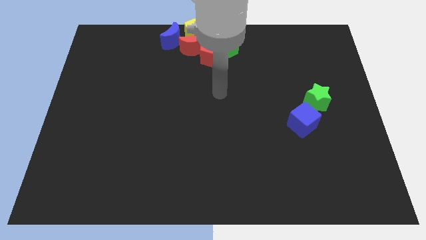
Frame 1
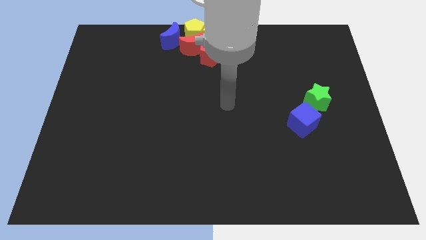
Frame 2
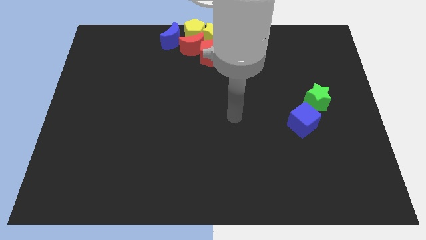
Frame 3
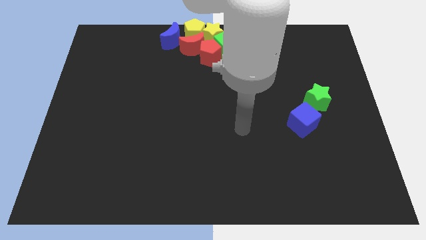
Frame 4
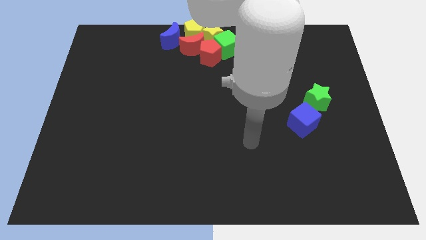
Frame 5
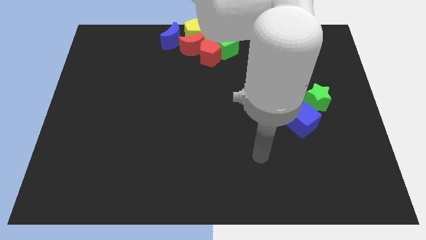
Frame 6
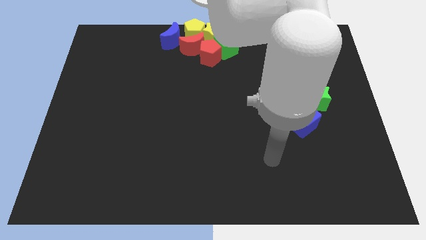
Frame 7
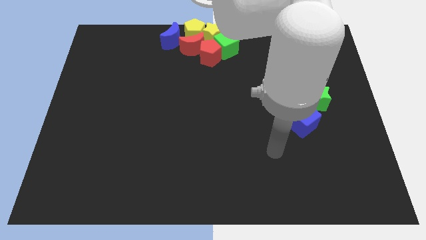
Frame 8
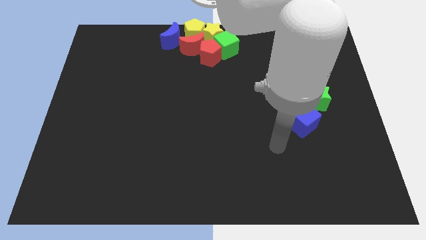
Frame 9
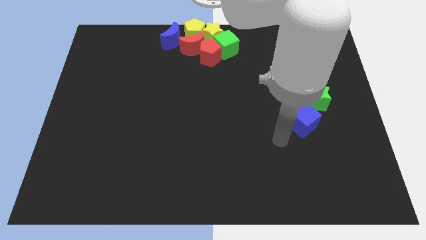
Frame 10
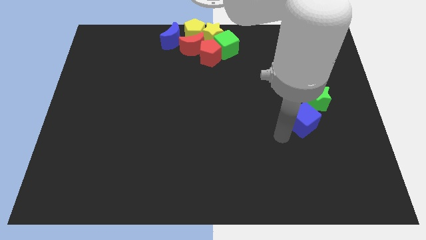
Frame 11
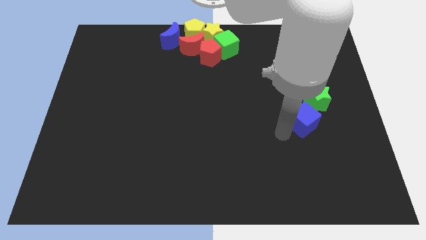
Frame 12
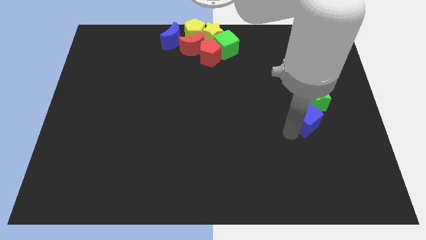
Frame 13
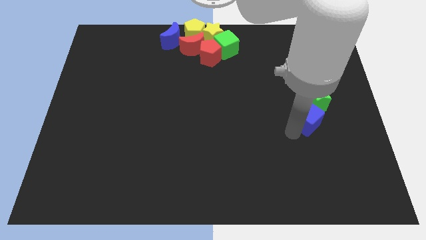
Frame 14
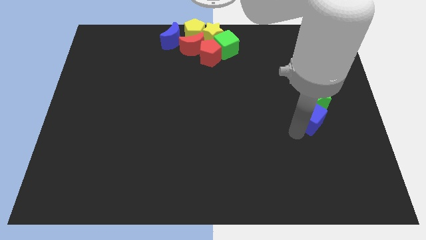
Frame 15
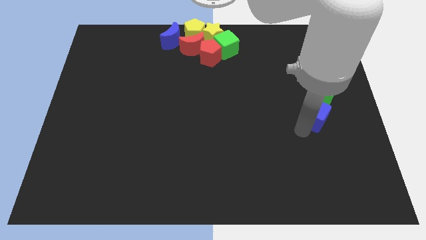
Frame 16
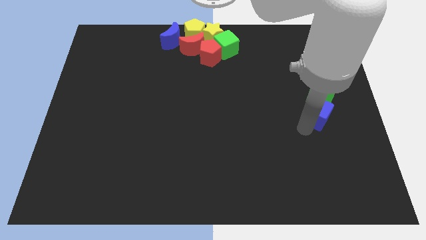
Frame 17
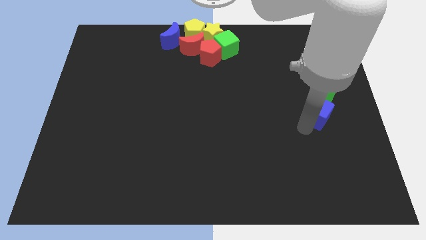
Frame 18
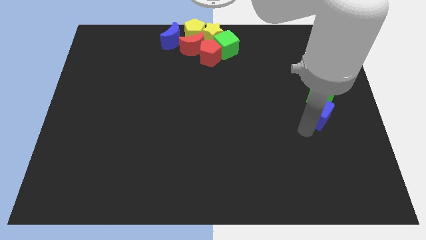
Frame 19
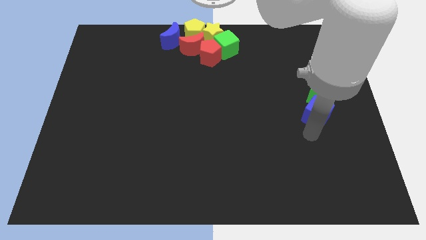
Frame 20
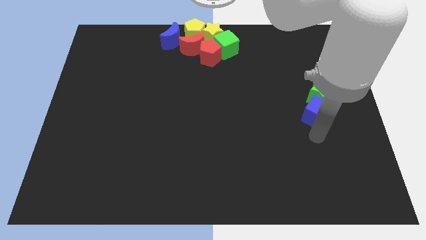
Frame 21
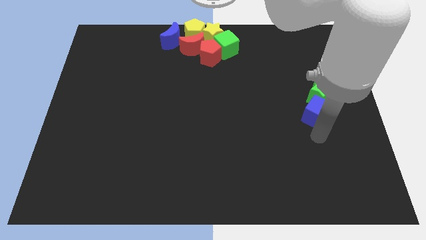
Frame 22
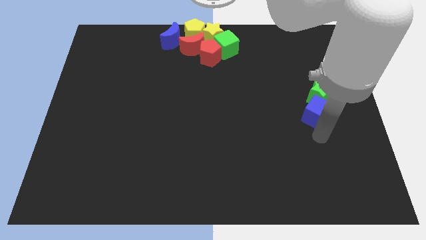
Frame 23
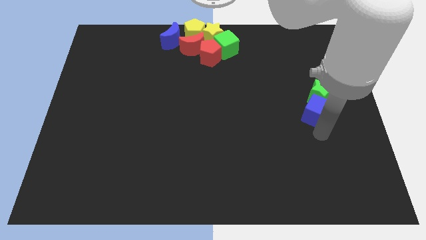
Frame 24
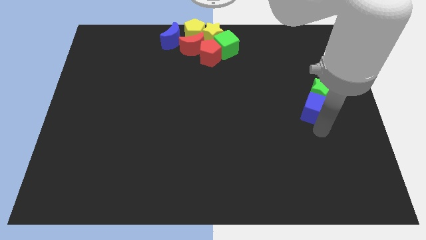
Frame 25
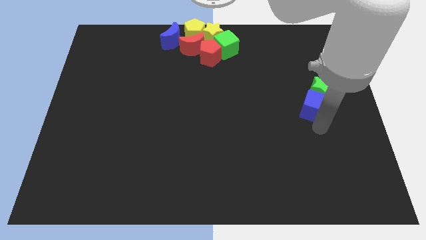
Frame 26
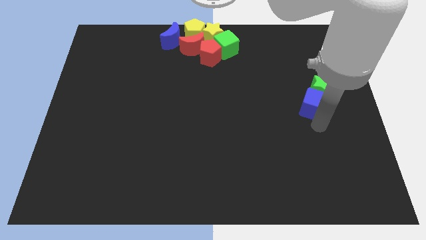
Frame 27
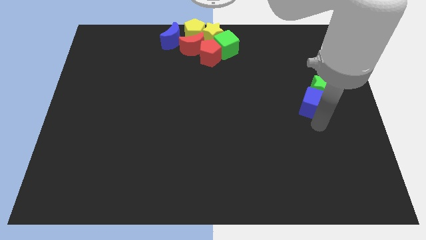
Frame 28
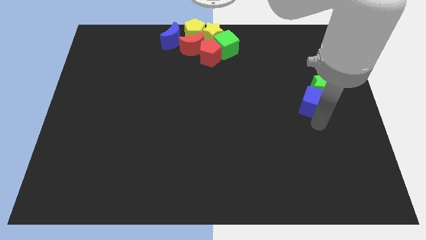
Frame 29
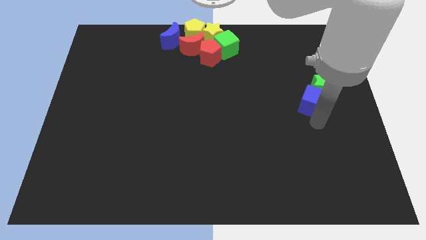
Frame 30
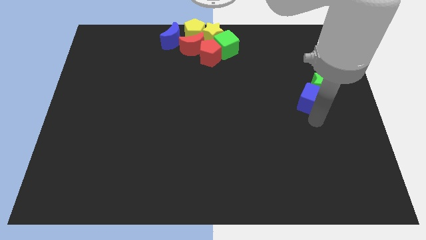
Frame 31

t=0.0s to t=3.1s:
move blue cube into green star

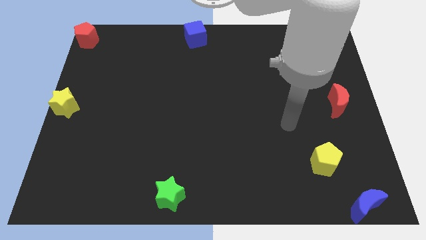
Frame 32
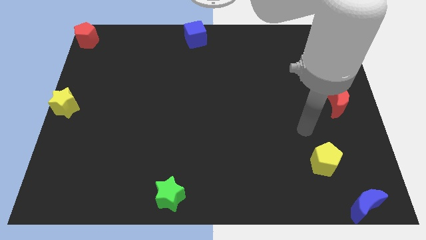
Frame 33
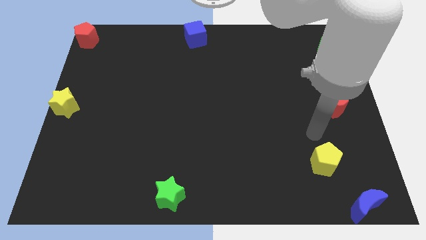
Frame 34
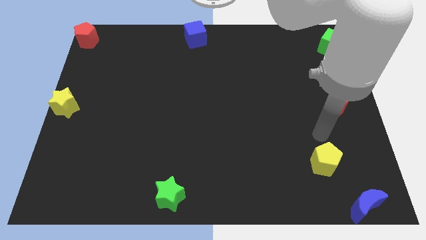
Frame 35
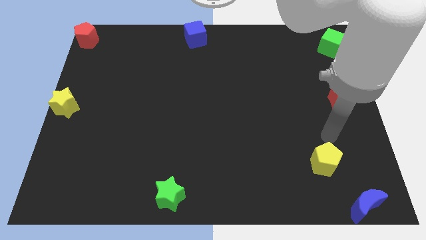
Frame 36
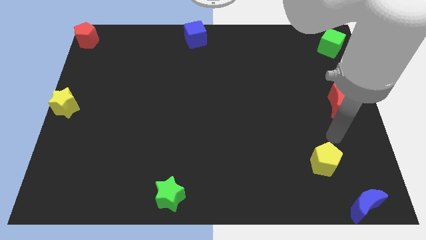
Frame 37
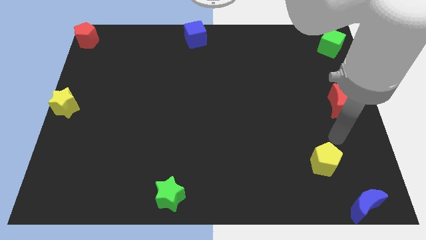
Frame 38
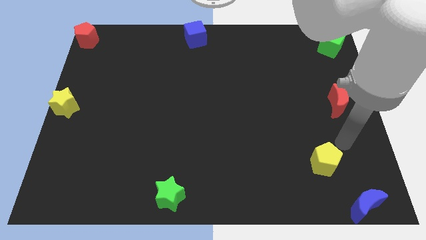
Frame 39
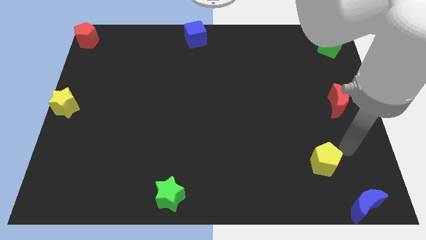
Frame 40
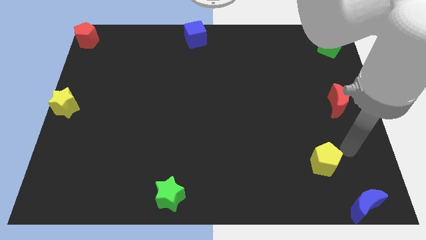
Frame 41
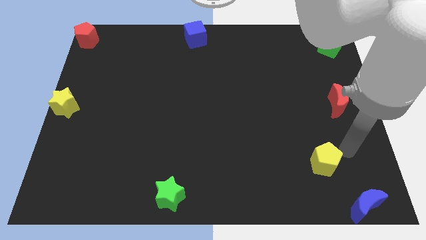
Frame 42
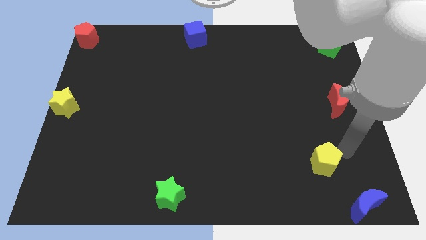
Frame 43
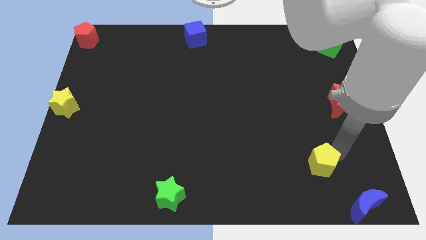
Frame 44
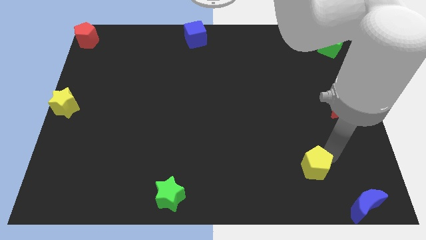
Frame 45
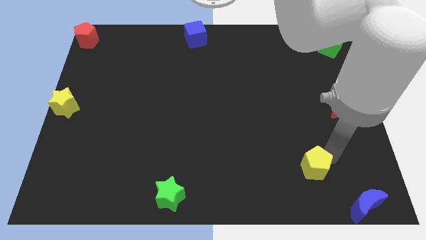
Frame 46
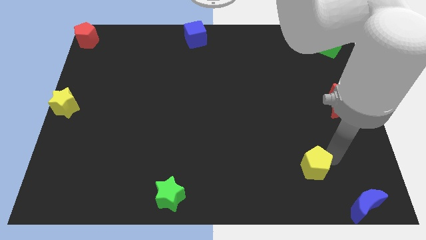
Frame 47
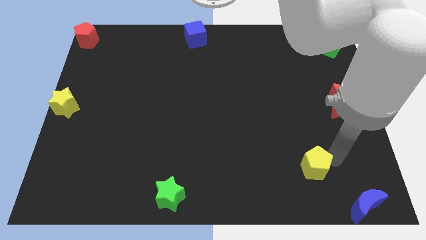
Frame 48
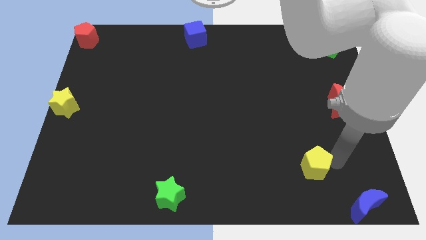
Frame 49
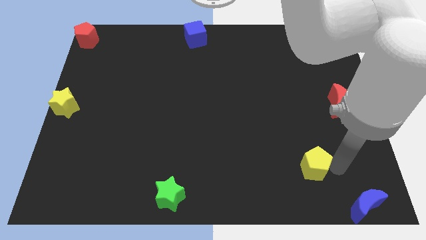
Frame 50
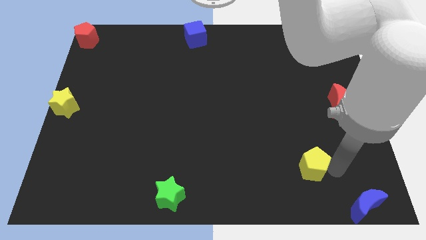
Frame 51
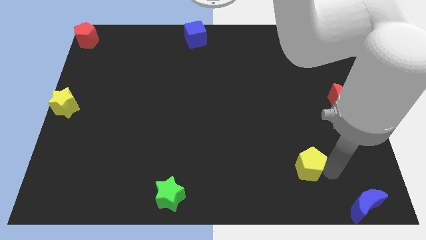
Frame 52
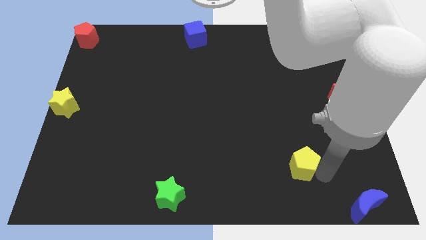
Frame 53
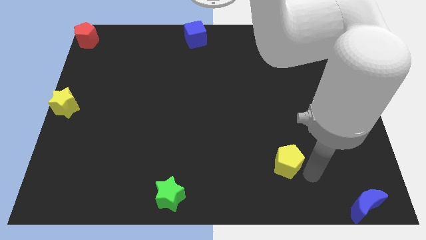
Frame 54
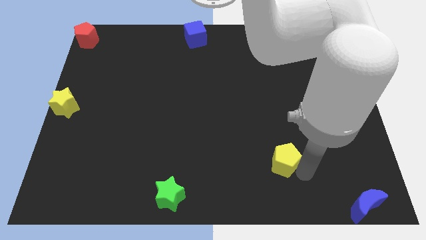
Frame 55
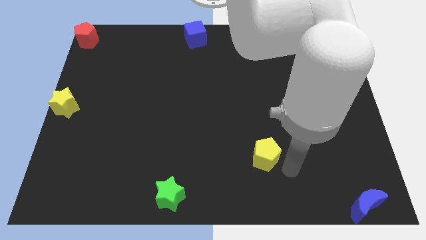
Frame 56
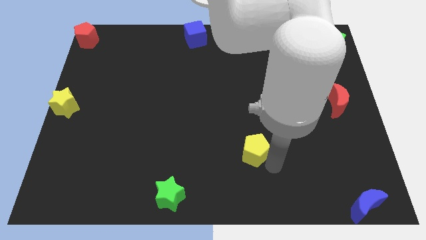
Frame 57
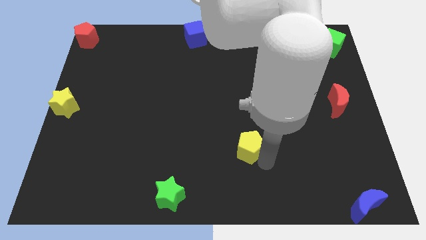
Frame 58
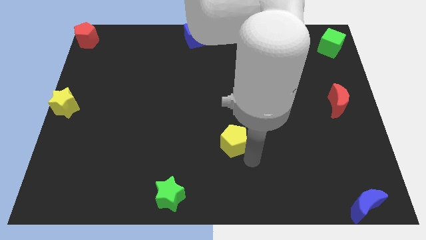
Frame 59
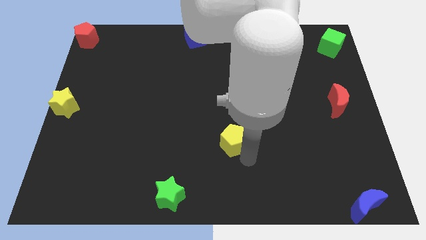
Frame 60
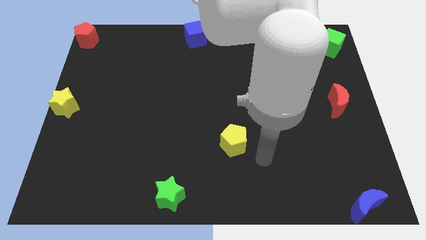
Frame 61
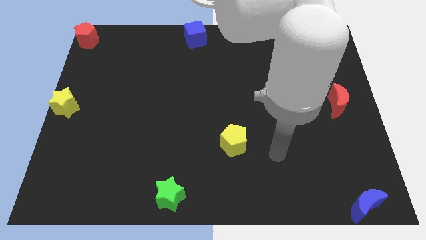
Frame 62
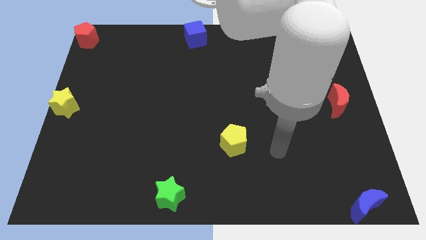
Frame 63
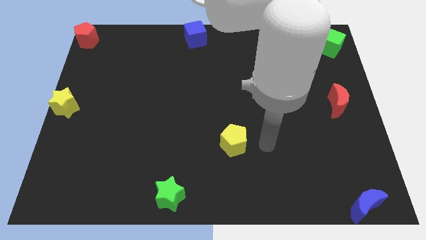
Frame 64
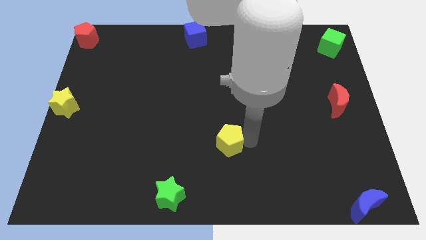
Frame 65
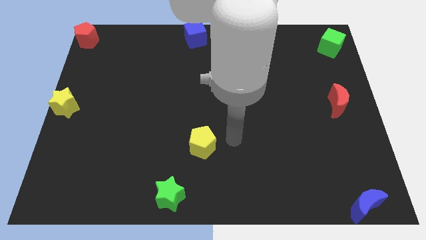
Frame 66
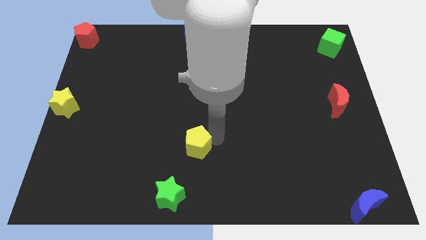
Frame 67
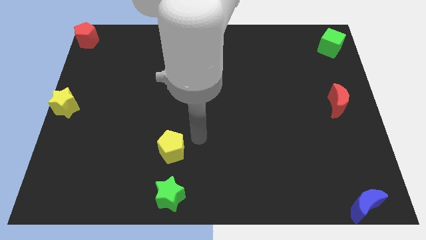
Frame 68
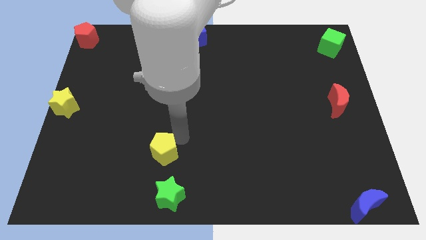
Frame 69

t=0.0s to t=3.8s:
place the yellow pentagon above the green star

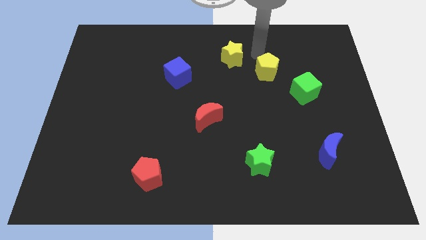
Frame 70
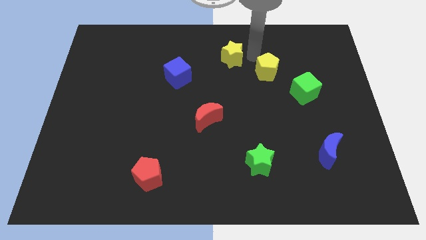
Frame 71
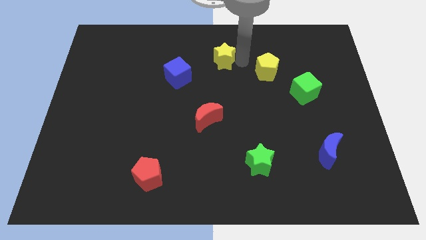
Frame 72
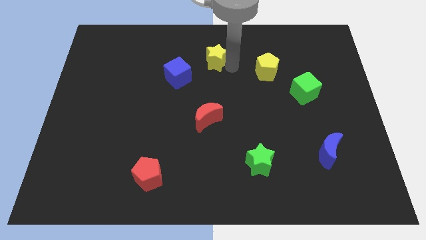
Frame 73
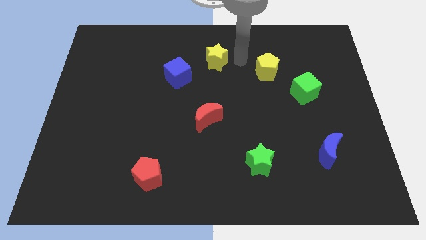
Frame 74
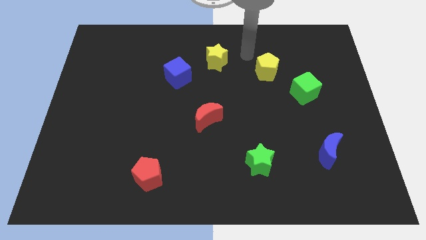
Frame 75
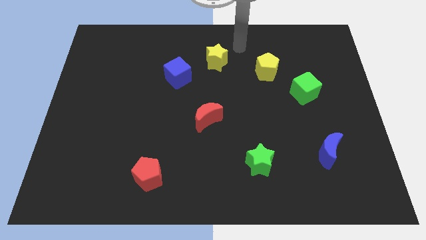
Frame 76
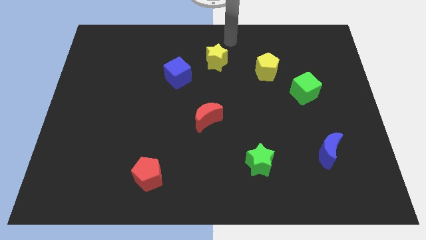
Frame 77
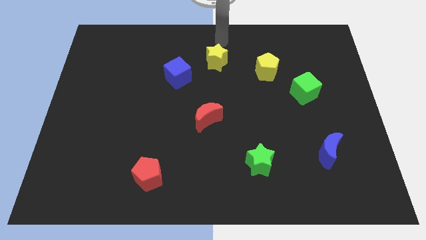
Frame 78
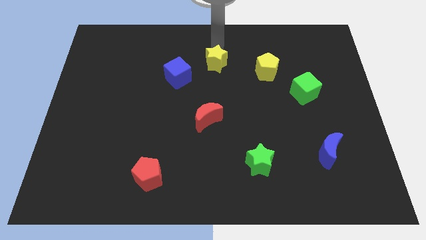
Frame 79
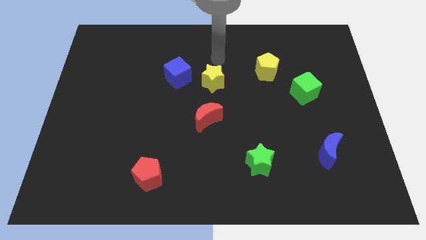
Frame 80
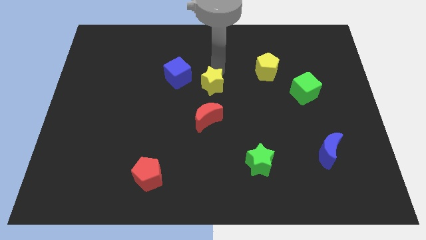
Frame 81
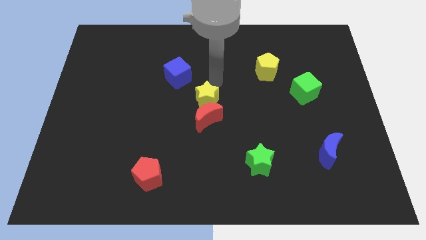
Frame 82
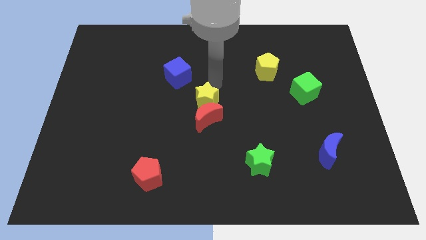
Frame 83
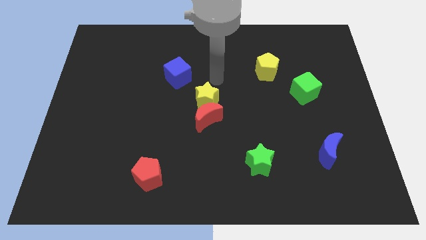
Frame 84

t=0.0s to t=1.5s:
move yellow star above red moon

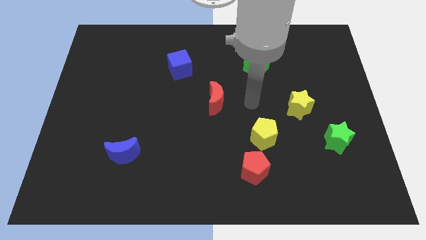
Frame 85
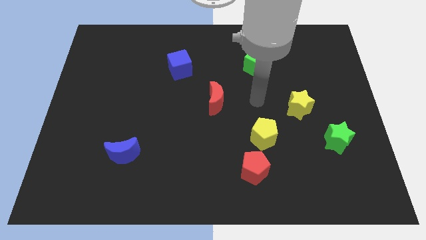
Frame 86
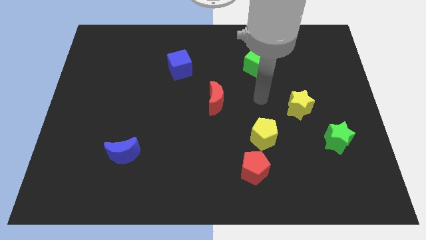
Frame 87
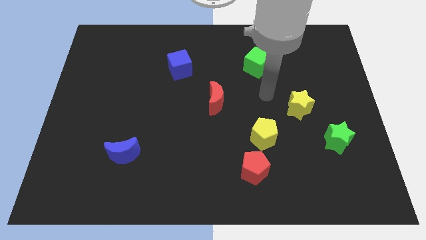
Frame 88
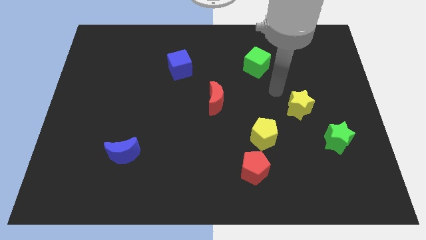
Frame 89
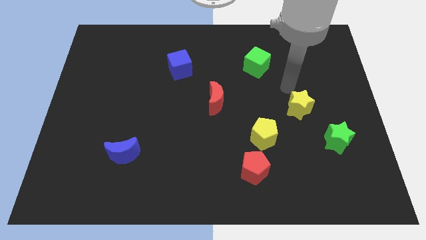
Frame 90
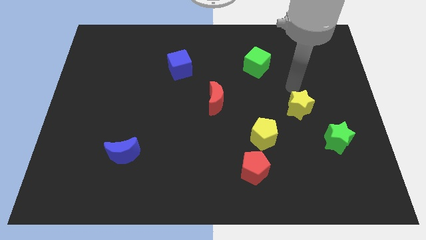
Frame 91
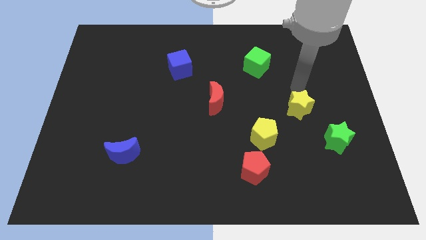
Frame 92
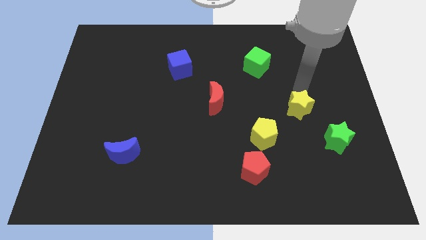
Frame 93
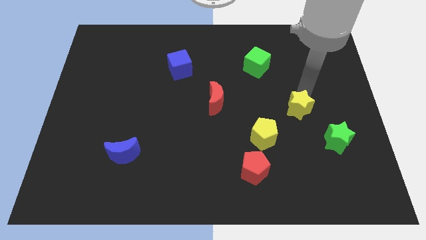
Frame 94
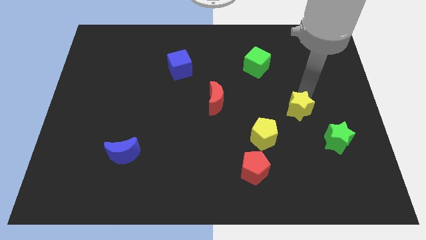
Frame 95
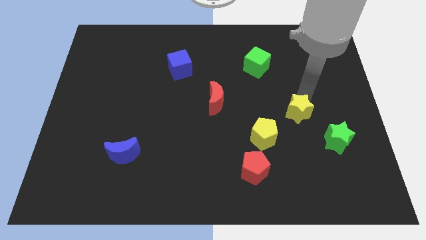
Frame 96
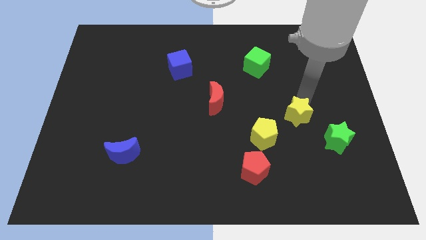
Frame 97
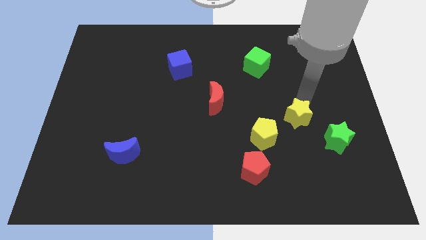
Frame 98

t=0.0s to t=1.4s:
push yellow star slightly down
